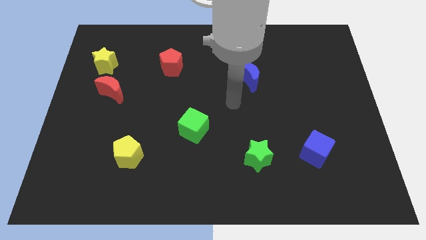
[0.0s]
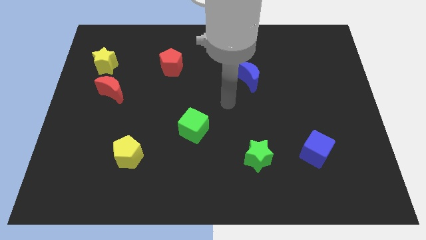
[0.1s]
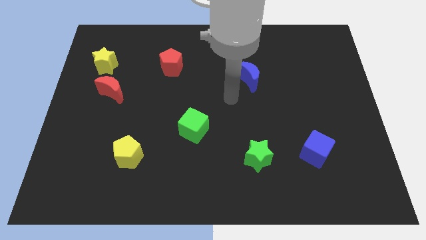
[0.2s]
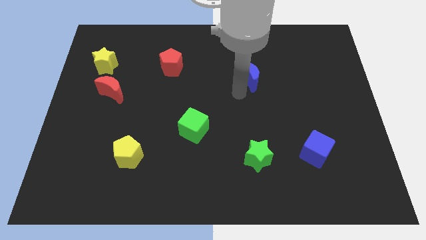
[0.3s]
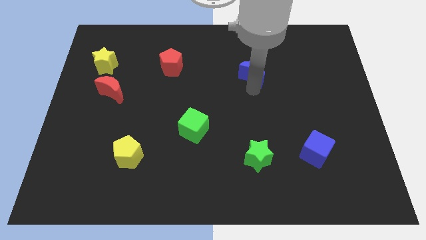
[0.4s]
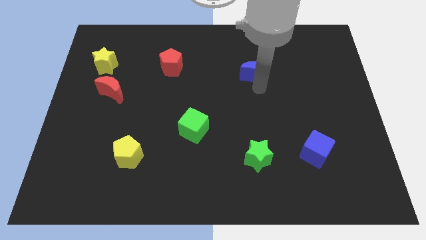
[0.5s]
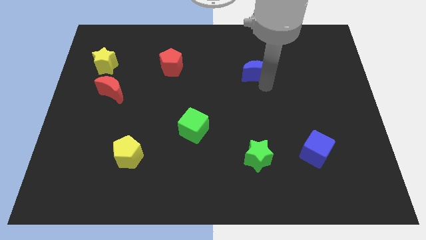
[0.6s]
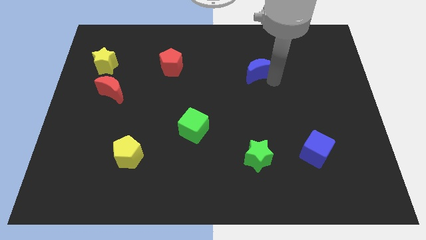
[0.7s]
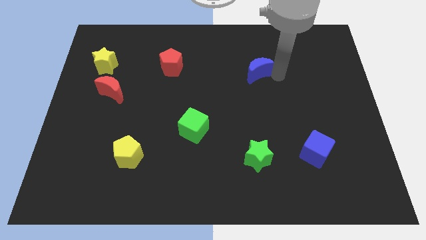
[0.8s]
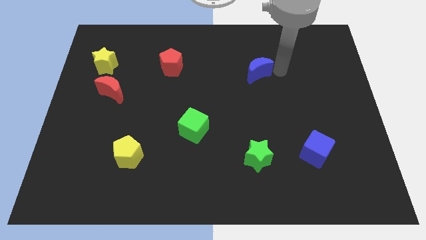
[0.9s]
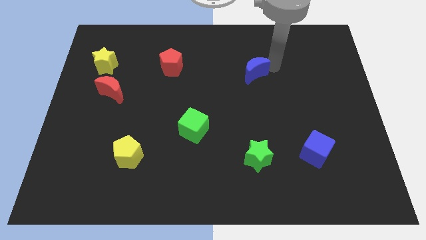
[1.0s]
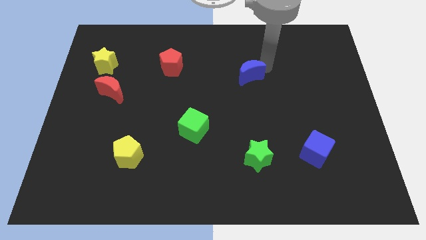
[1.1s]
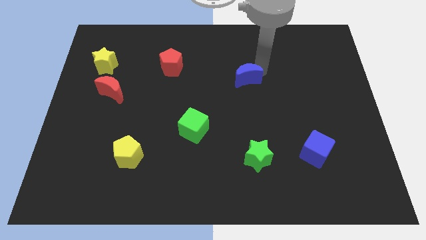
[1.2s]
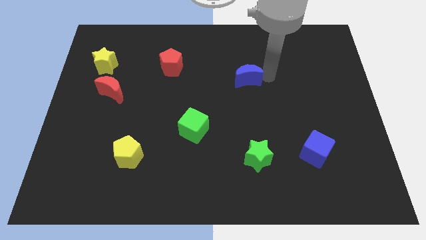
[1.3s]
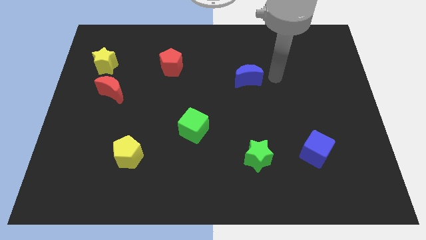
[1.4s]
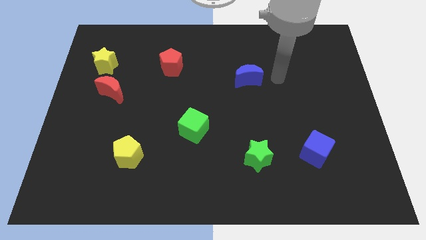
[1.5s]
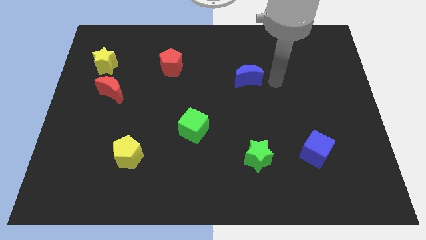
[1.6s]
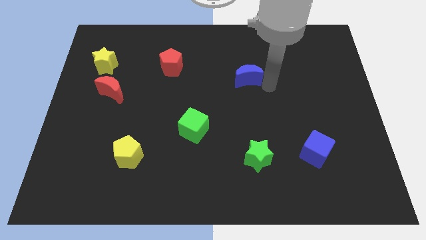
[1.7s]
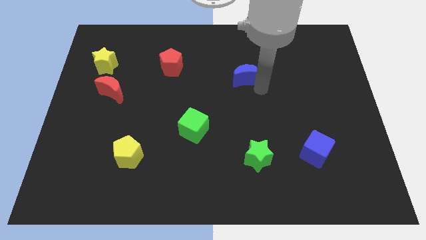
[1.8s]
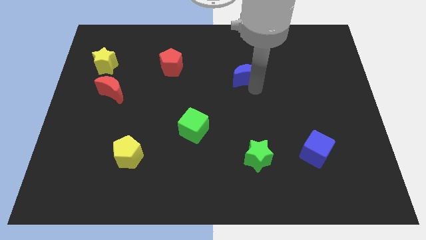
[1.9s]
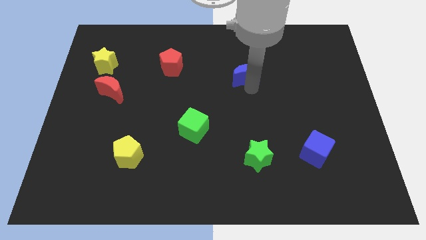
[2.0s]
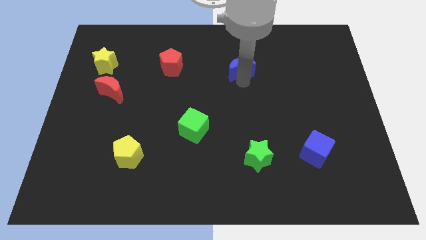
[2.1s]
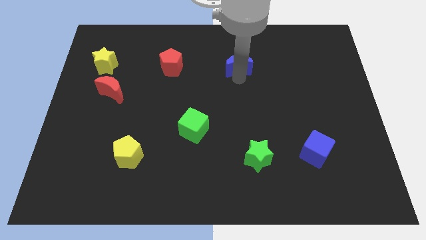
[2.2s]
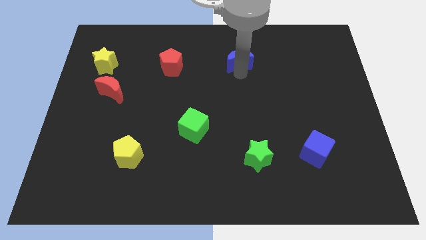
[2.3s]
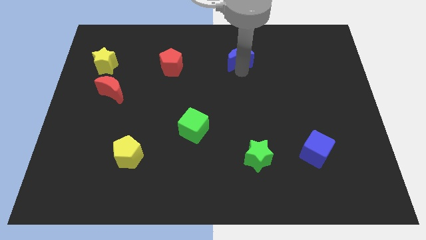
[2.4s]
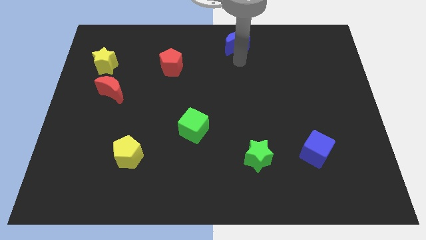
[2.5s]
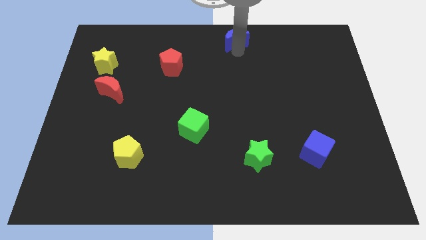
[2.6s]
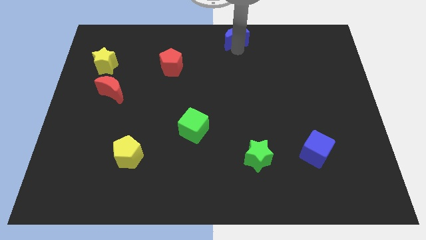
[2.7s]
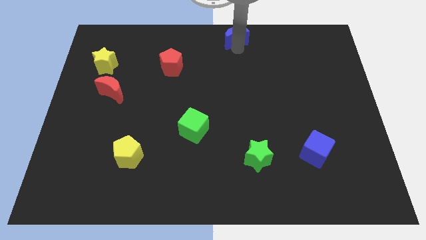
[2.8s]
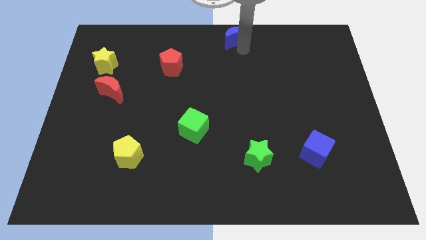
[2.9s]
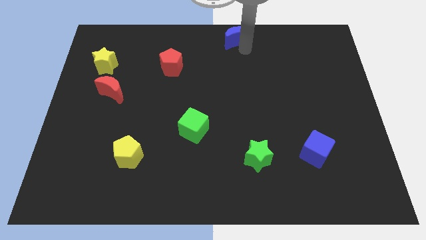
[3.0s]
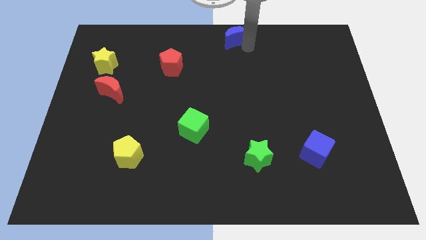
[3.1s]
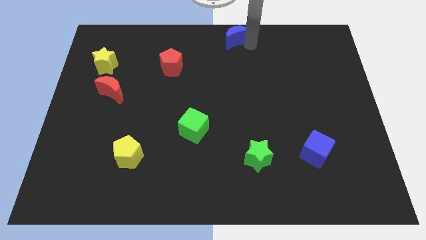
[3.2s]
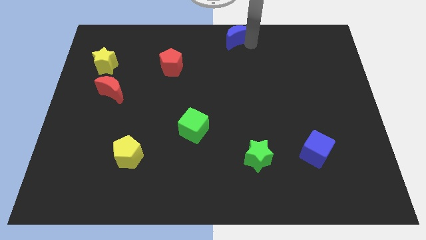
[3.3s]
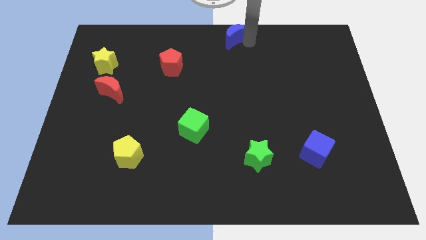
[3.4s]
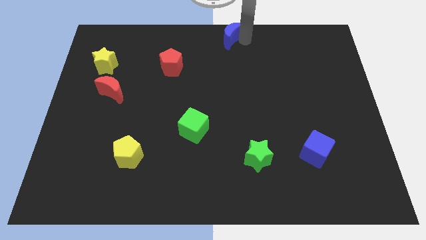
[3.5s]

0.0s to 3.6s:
move the blue moon towards the top side

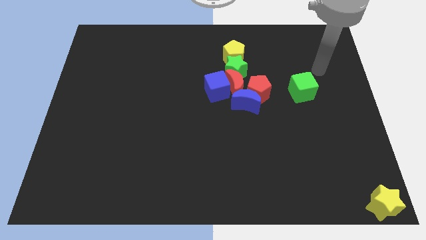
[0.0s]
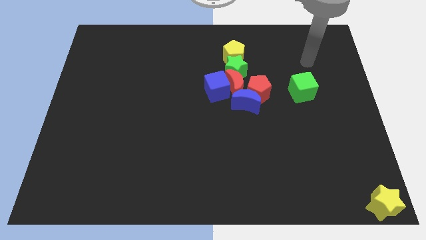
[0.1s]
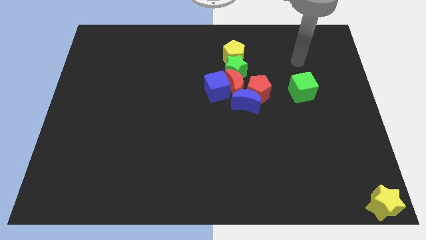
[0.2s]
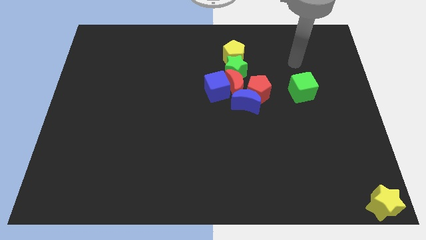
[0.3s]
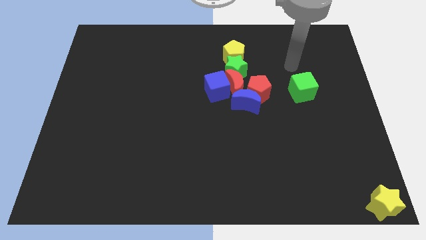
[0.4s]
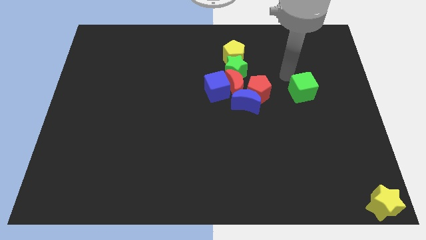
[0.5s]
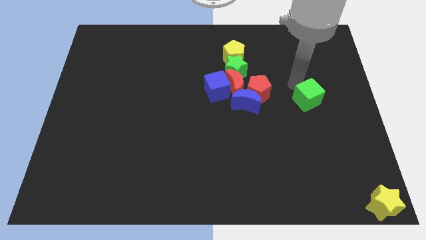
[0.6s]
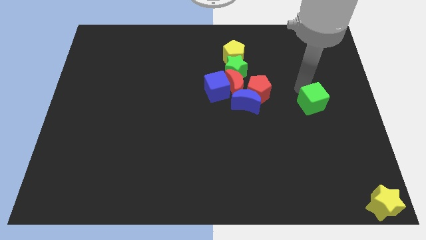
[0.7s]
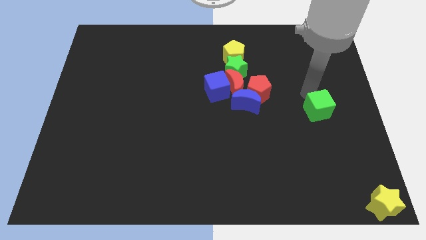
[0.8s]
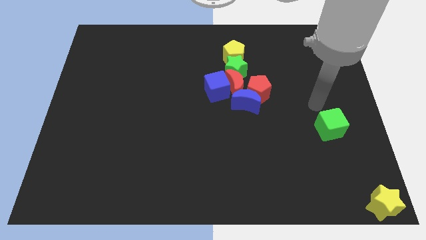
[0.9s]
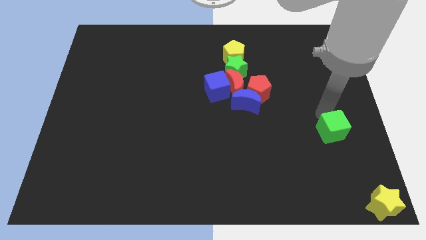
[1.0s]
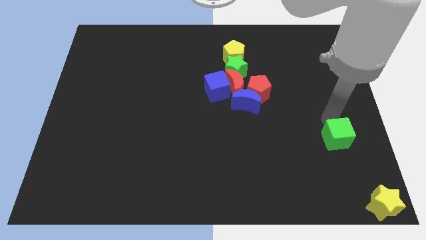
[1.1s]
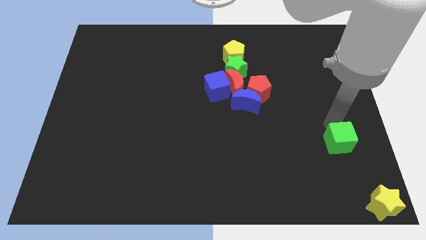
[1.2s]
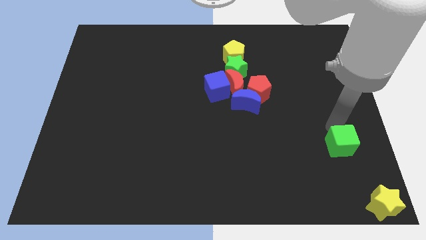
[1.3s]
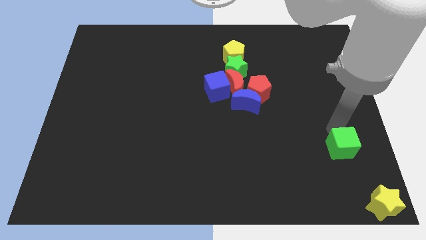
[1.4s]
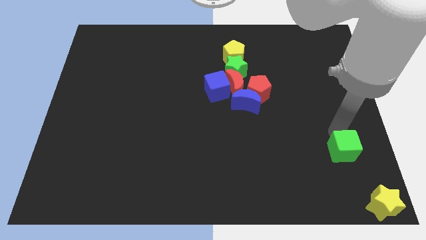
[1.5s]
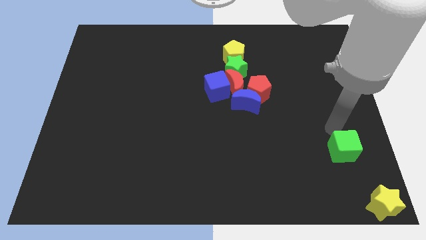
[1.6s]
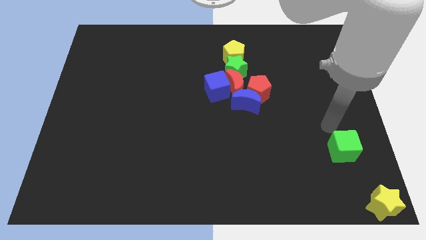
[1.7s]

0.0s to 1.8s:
push the green cube downwards

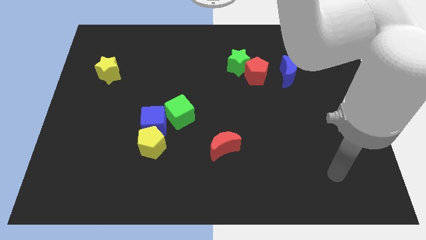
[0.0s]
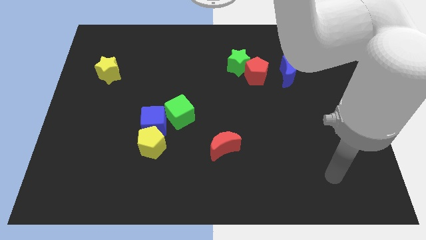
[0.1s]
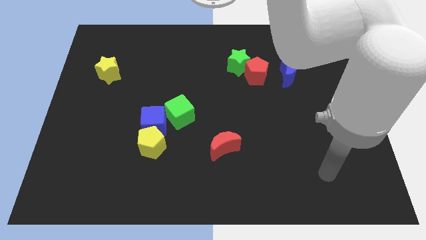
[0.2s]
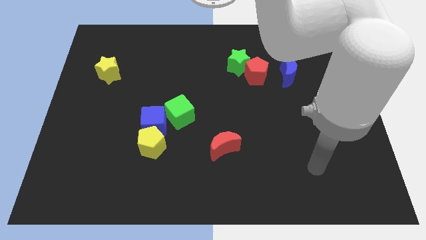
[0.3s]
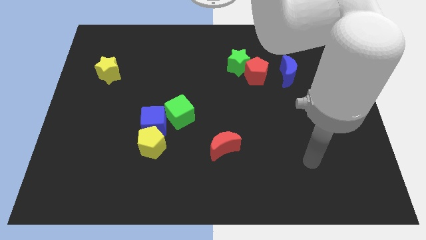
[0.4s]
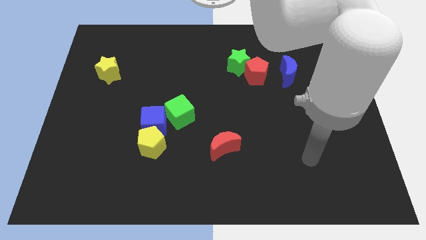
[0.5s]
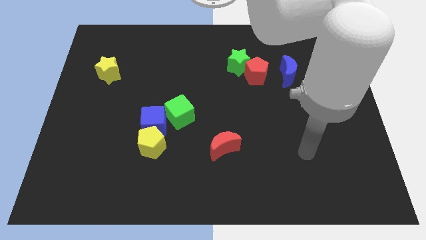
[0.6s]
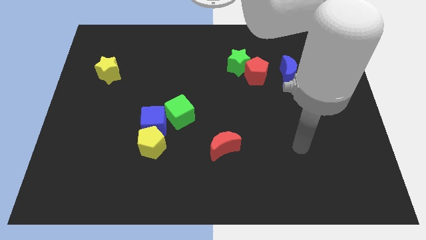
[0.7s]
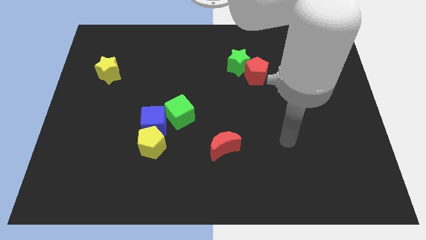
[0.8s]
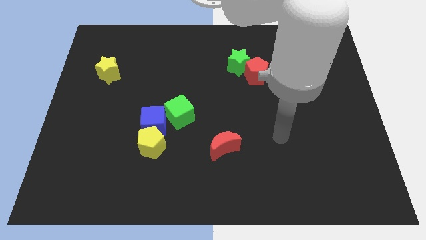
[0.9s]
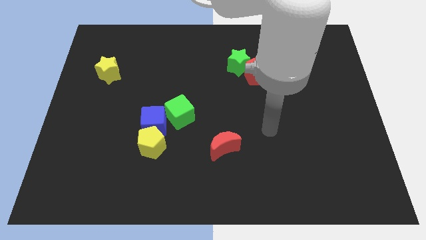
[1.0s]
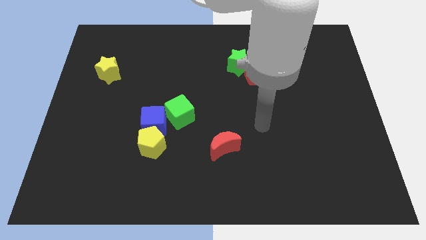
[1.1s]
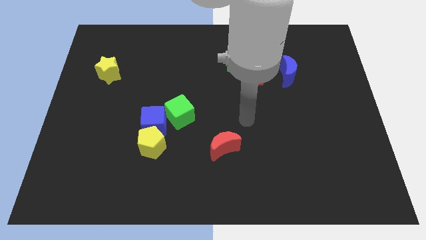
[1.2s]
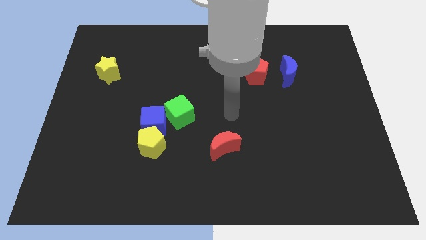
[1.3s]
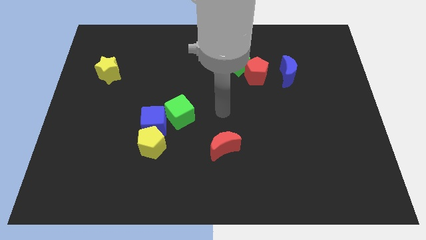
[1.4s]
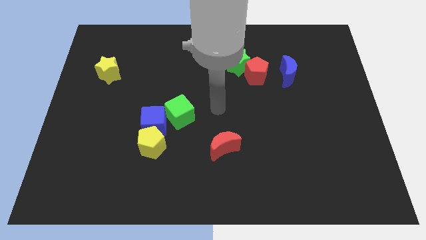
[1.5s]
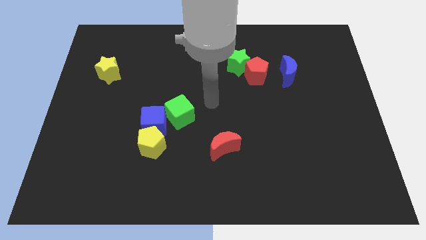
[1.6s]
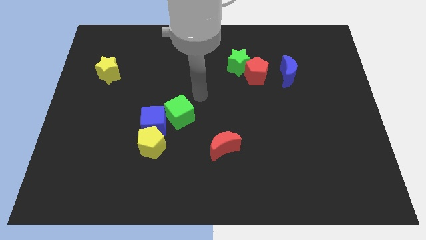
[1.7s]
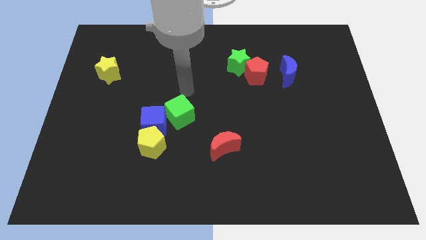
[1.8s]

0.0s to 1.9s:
put your hand above the green cube

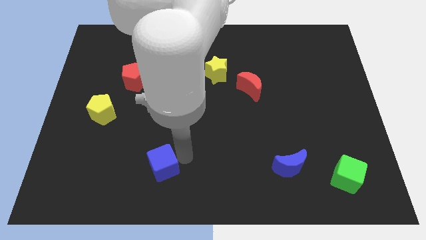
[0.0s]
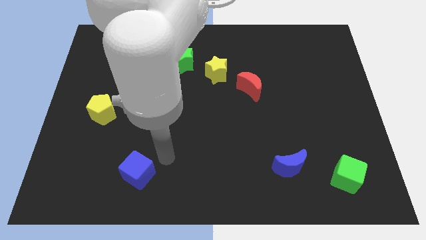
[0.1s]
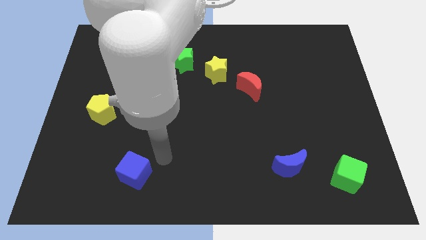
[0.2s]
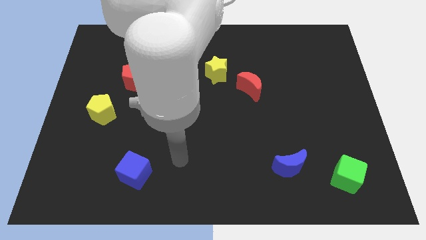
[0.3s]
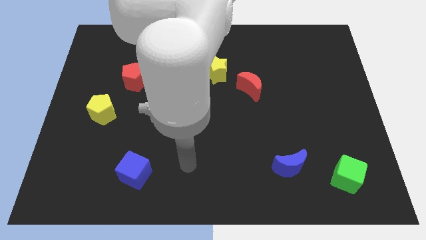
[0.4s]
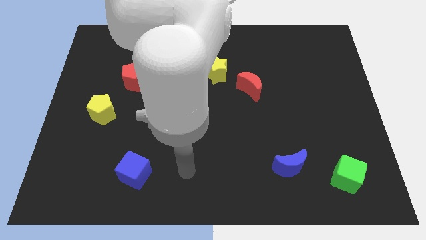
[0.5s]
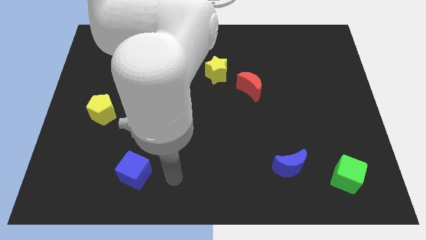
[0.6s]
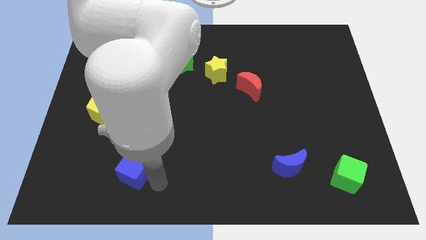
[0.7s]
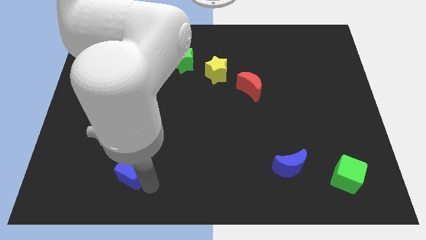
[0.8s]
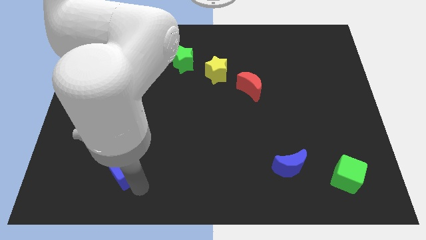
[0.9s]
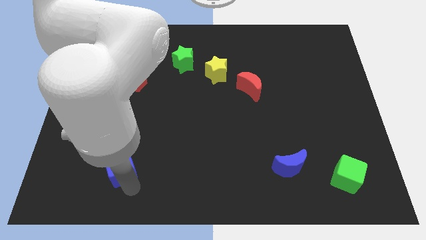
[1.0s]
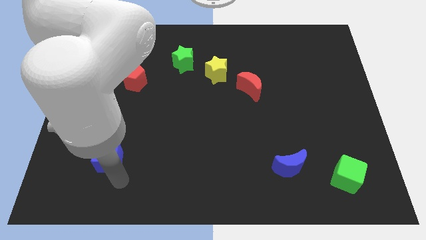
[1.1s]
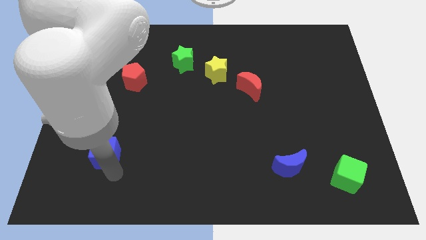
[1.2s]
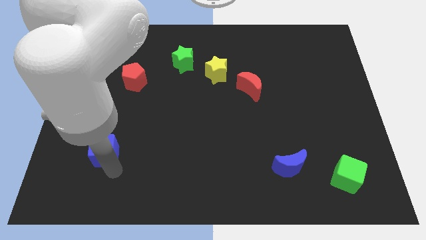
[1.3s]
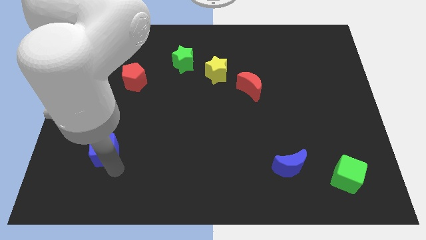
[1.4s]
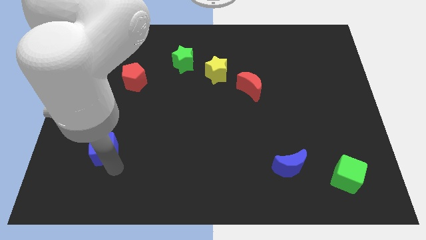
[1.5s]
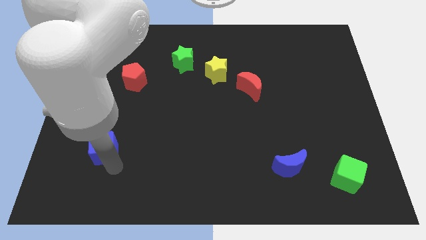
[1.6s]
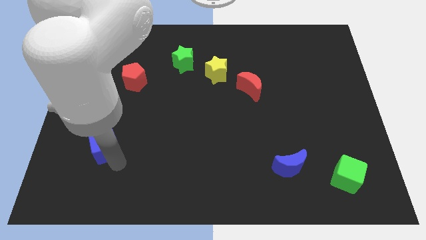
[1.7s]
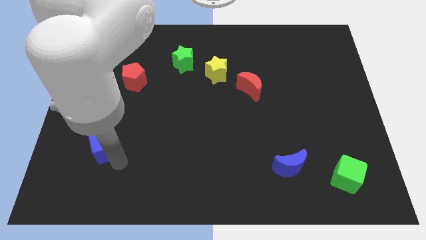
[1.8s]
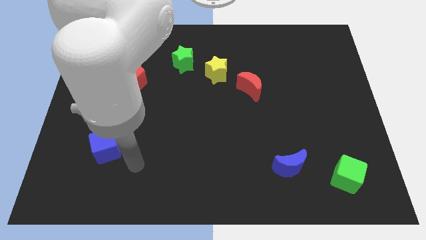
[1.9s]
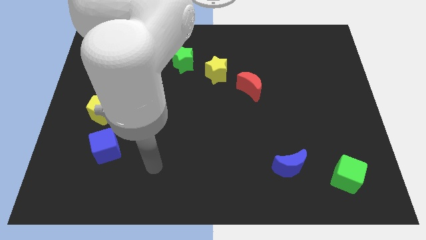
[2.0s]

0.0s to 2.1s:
place the blue cube under the yellow pentagon
